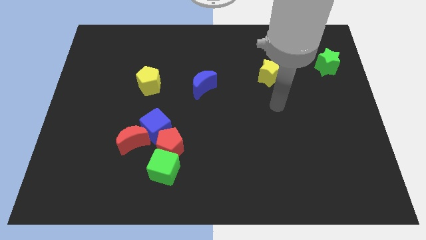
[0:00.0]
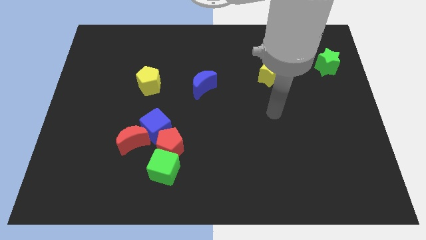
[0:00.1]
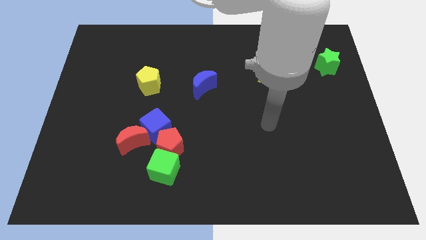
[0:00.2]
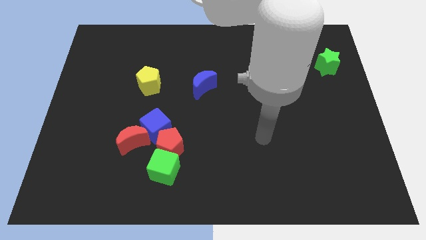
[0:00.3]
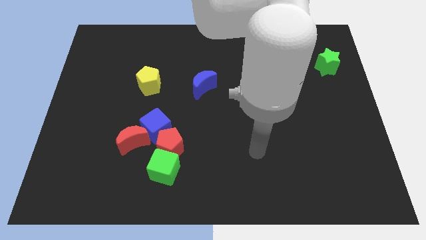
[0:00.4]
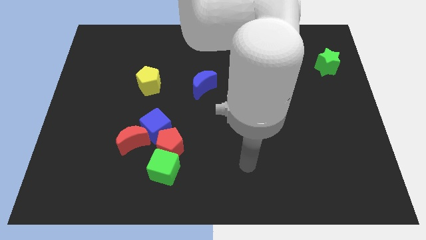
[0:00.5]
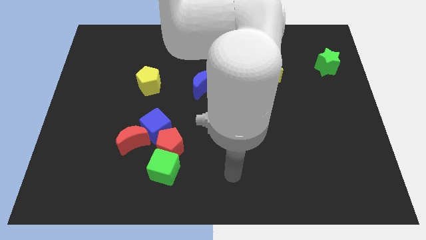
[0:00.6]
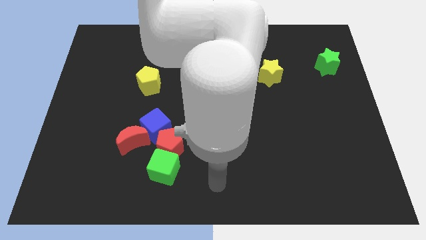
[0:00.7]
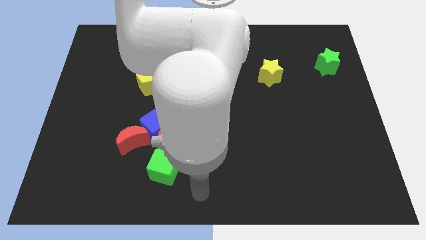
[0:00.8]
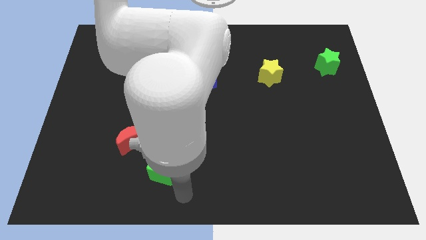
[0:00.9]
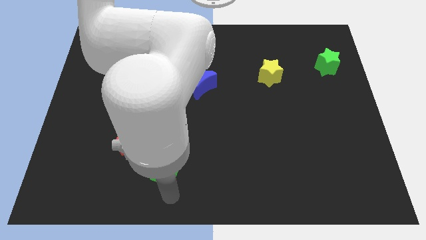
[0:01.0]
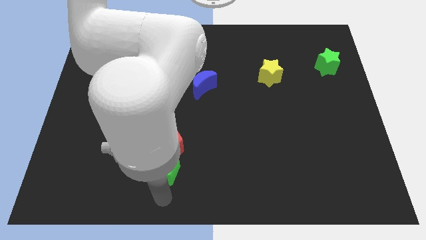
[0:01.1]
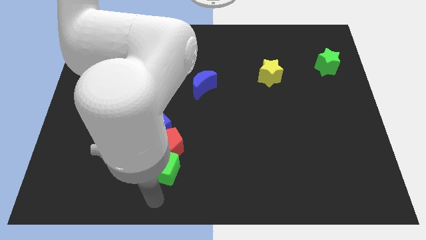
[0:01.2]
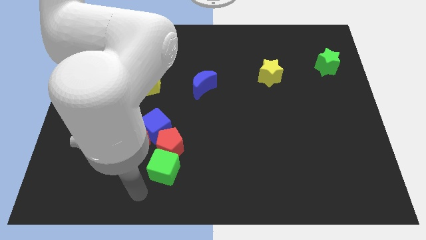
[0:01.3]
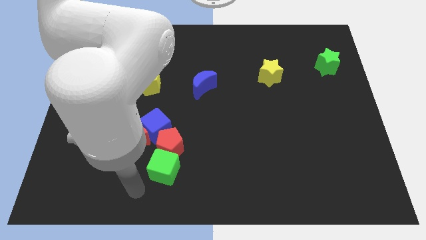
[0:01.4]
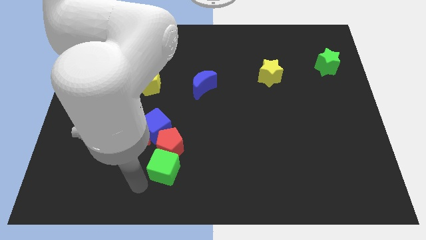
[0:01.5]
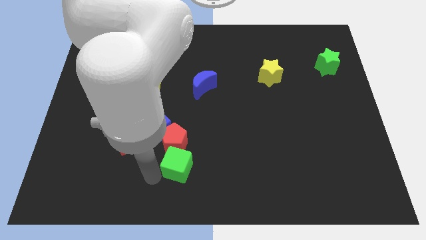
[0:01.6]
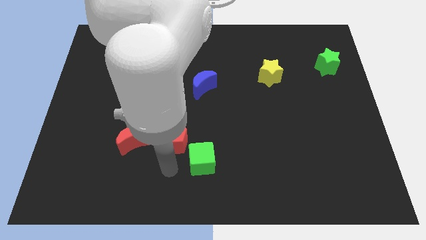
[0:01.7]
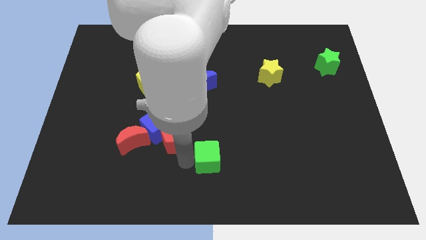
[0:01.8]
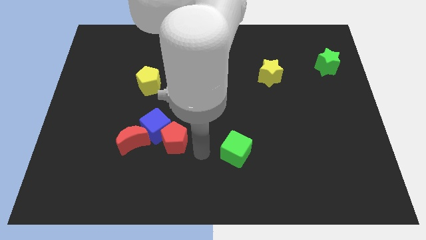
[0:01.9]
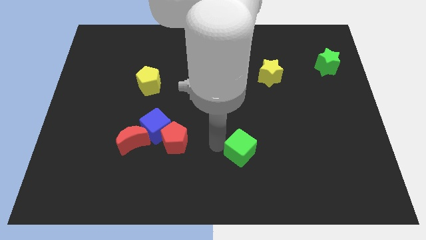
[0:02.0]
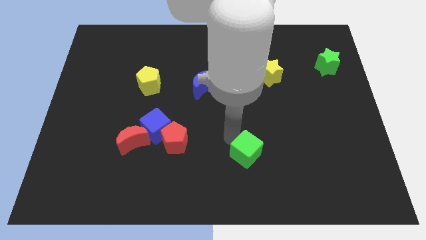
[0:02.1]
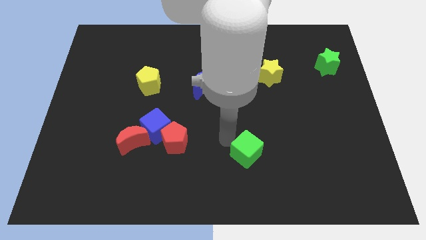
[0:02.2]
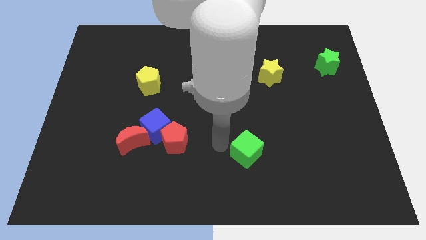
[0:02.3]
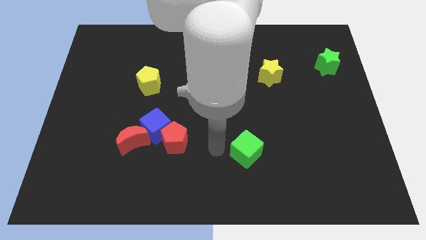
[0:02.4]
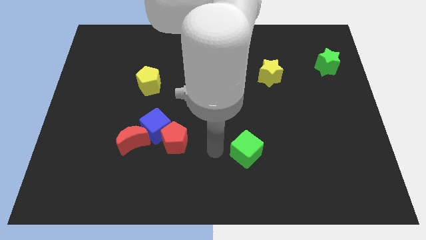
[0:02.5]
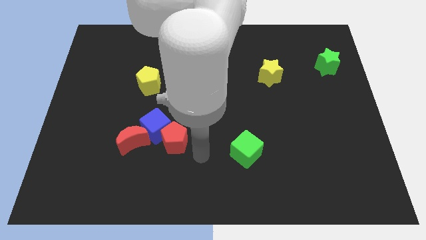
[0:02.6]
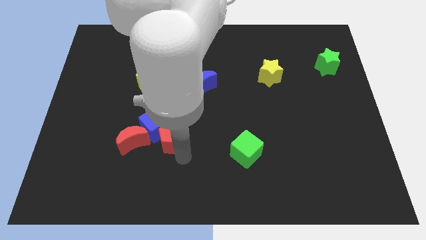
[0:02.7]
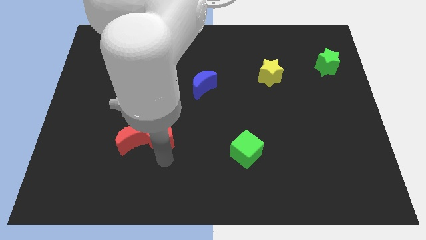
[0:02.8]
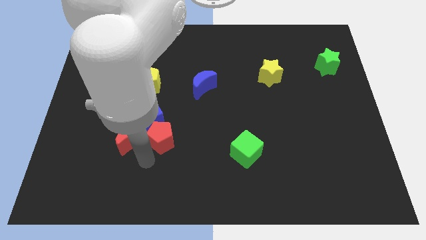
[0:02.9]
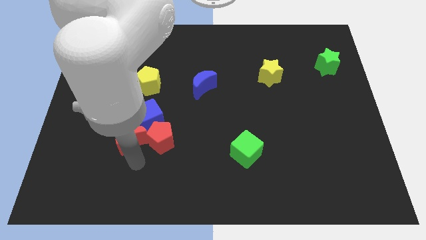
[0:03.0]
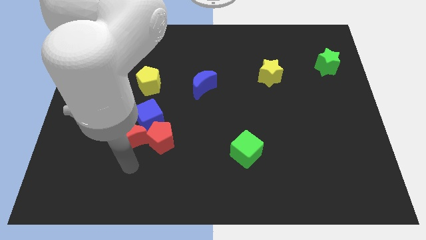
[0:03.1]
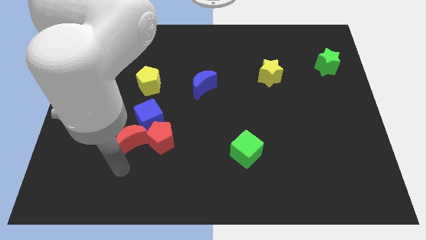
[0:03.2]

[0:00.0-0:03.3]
move the green cube to the right of the red pentagon

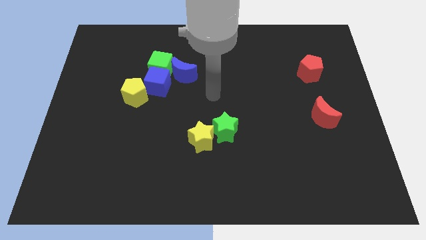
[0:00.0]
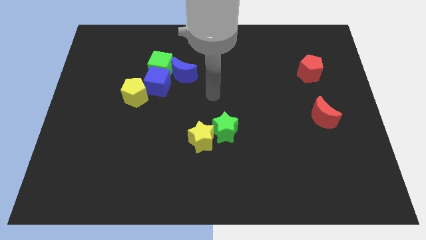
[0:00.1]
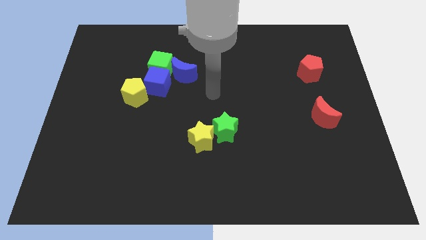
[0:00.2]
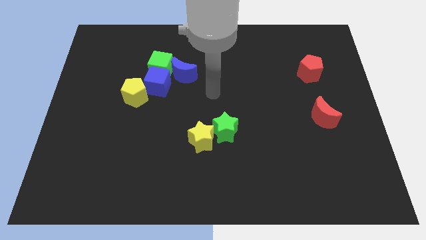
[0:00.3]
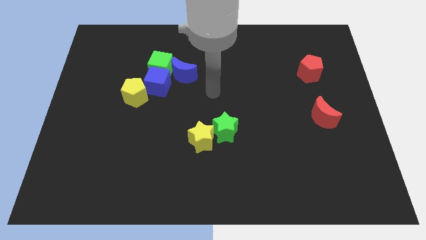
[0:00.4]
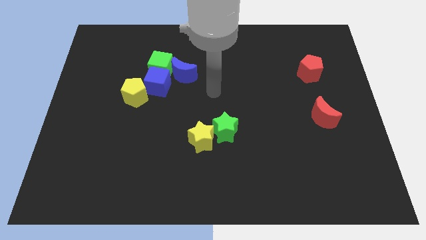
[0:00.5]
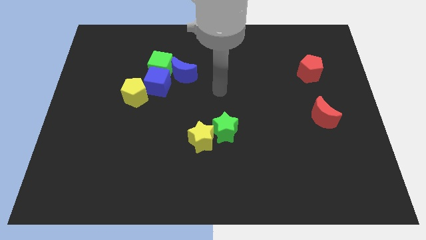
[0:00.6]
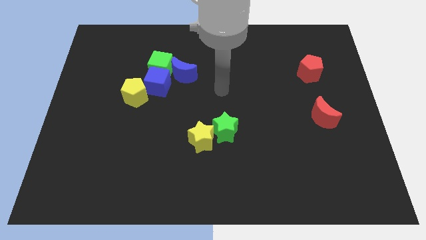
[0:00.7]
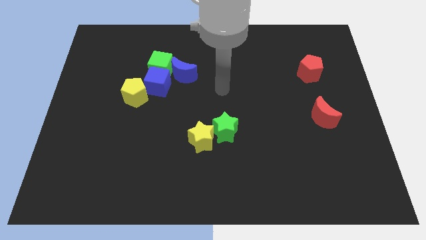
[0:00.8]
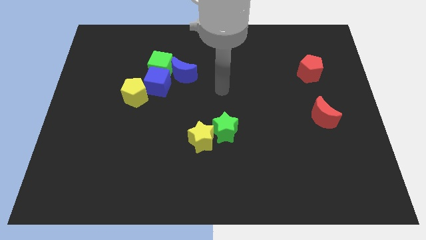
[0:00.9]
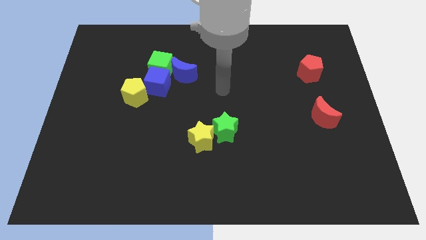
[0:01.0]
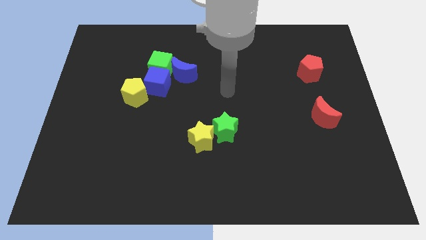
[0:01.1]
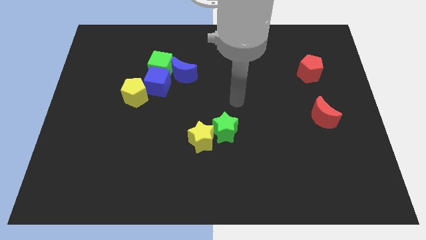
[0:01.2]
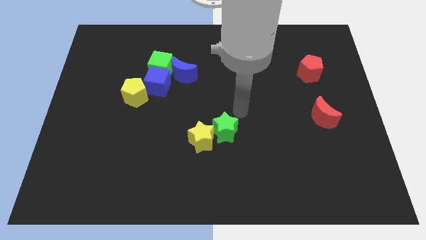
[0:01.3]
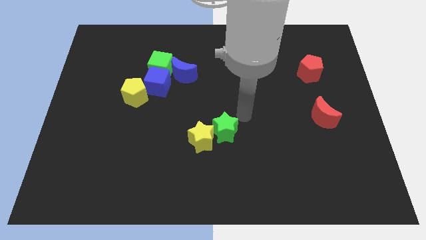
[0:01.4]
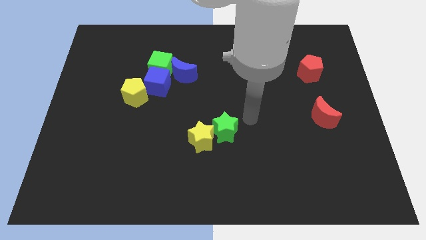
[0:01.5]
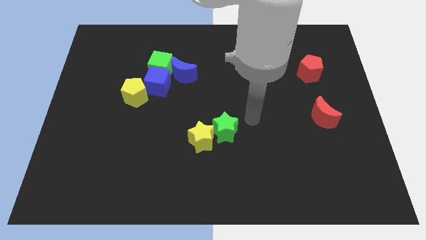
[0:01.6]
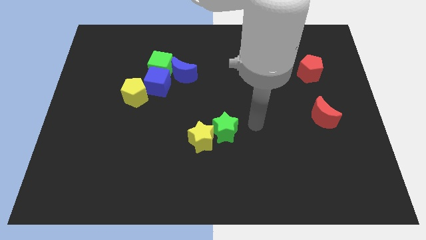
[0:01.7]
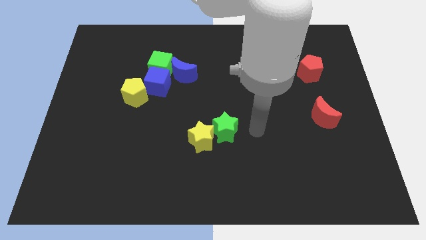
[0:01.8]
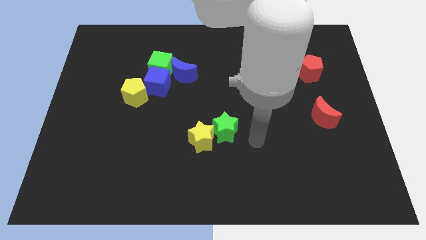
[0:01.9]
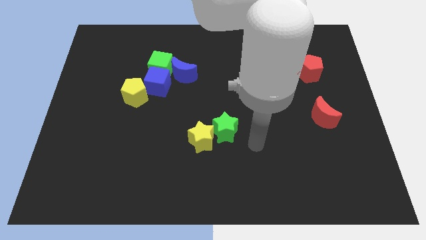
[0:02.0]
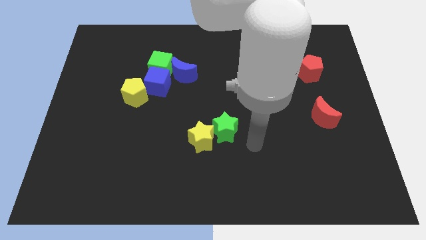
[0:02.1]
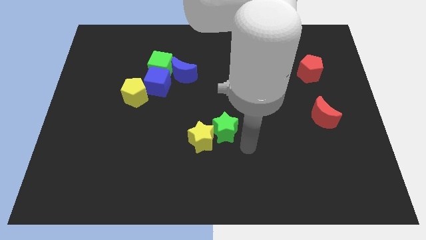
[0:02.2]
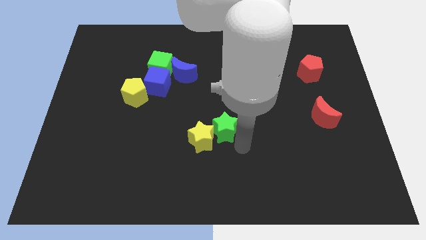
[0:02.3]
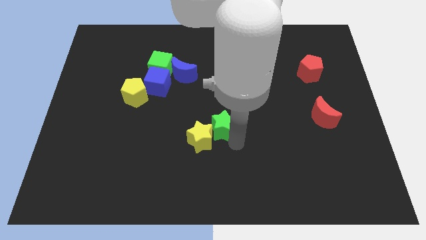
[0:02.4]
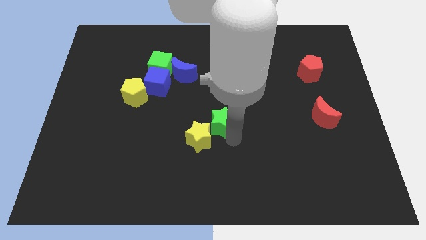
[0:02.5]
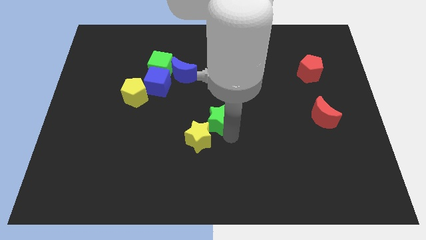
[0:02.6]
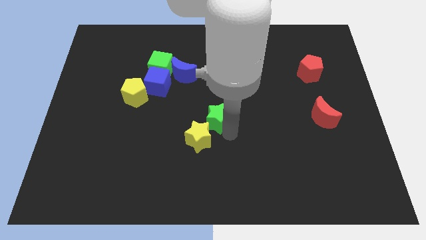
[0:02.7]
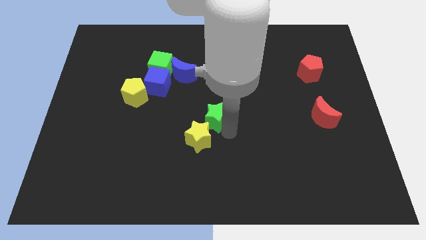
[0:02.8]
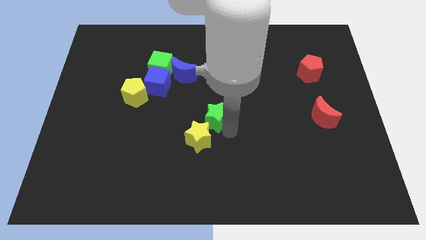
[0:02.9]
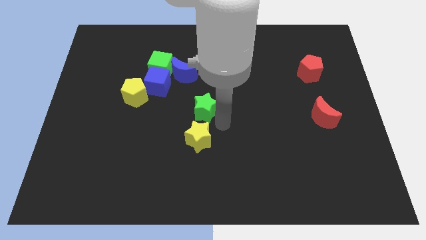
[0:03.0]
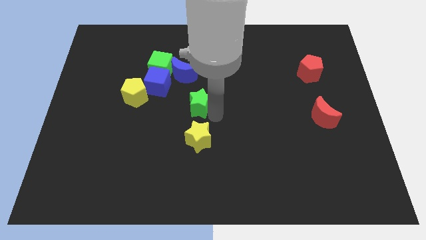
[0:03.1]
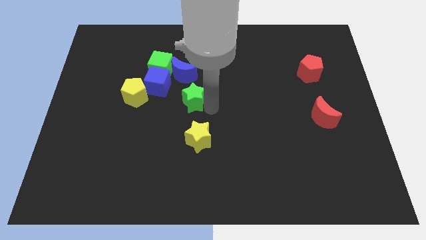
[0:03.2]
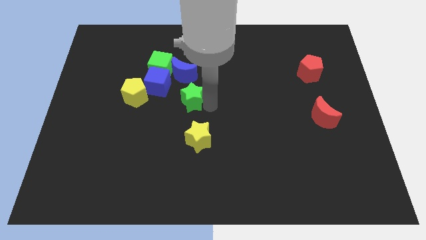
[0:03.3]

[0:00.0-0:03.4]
separate the green star from the yellow star

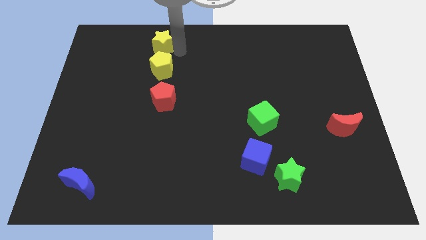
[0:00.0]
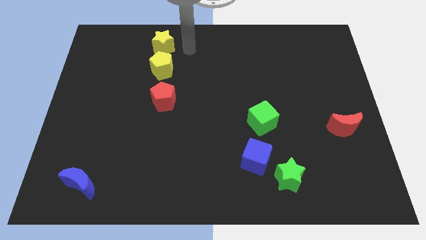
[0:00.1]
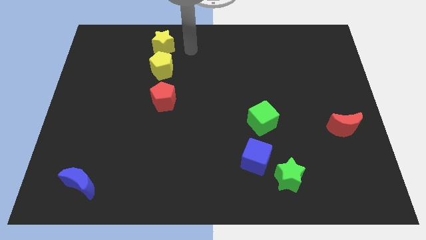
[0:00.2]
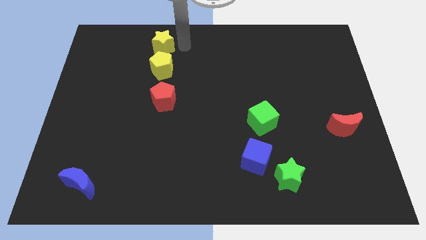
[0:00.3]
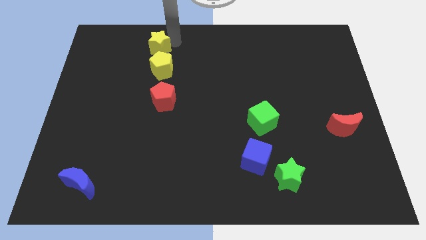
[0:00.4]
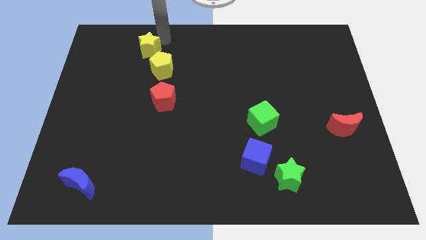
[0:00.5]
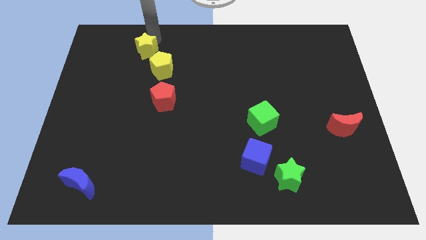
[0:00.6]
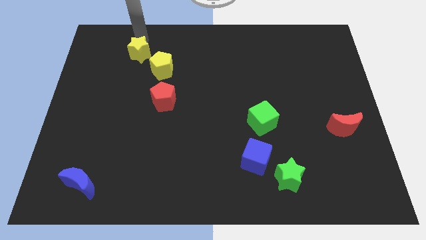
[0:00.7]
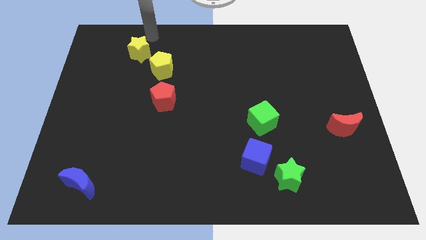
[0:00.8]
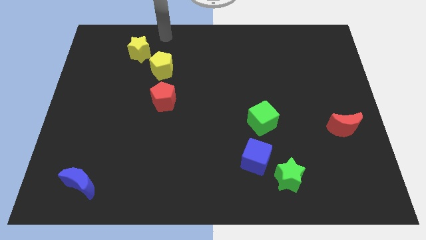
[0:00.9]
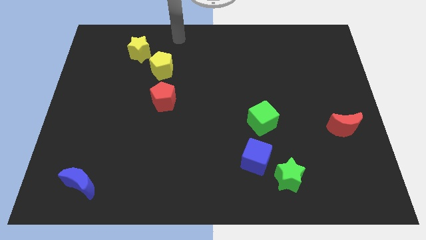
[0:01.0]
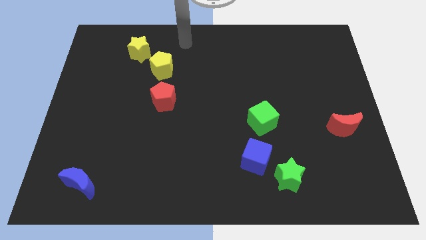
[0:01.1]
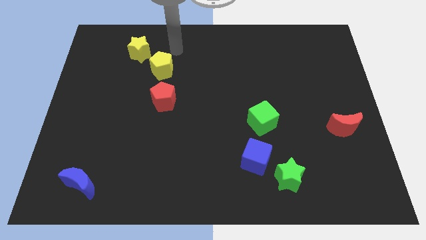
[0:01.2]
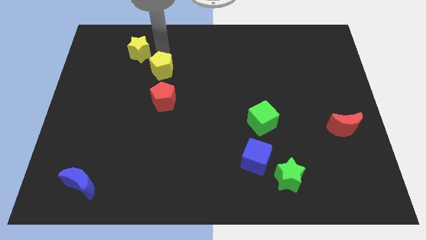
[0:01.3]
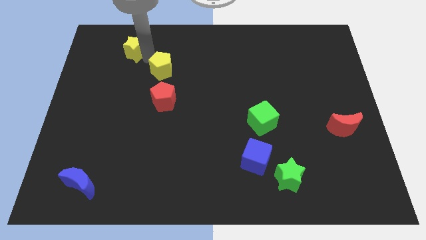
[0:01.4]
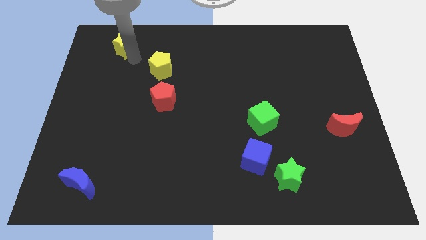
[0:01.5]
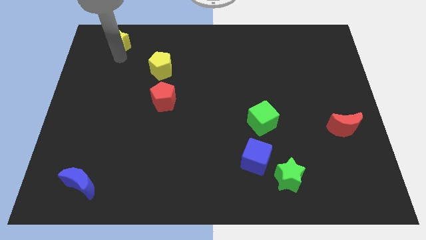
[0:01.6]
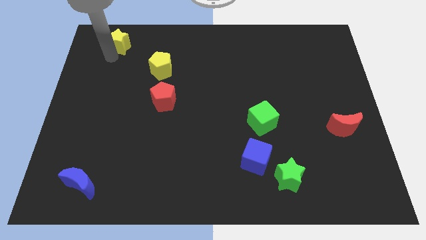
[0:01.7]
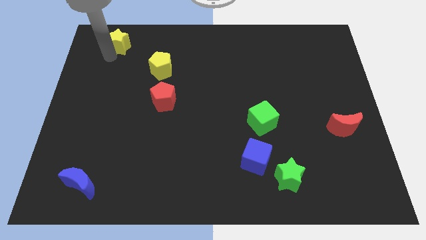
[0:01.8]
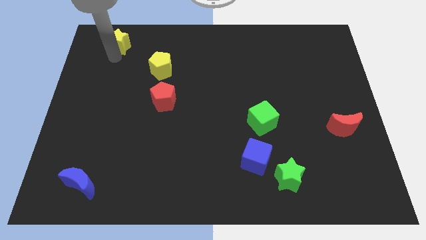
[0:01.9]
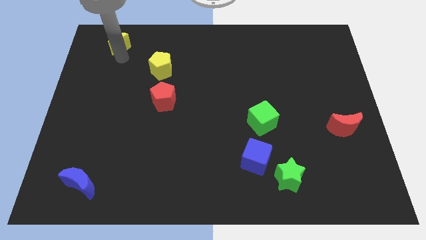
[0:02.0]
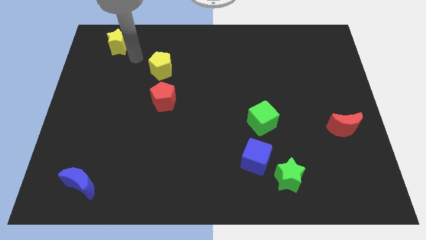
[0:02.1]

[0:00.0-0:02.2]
move yellow star slightly to the left
